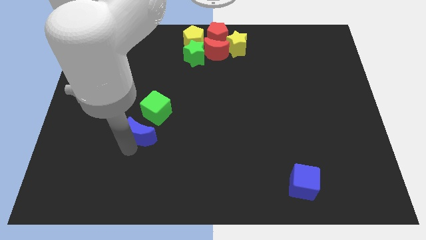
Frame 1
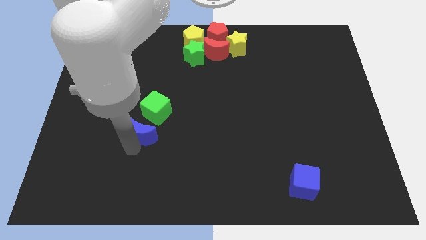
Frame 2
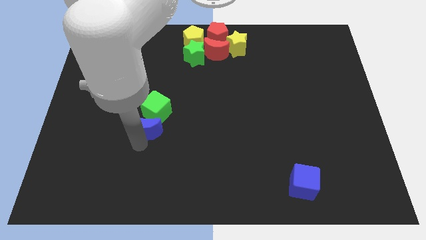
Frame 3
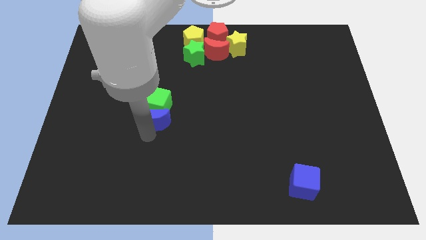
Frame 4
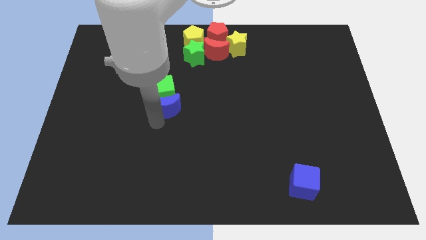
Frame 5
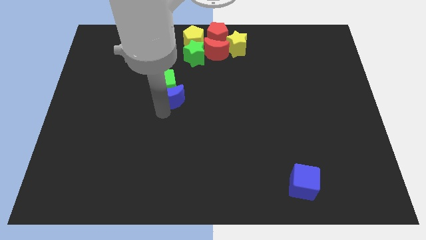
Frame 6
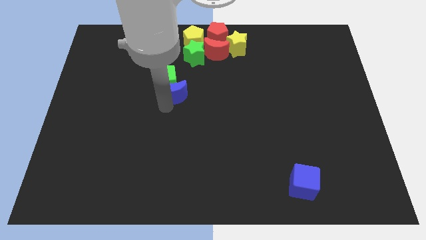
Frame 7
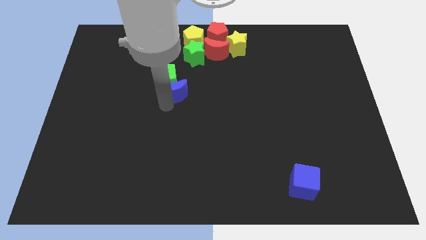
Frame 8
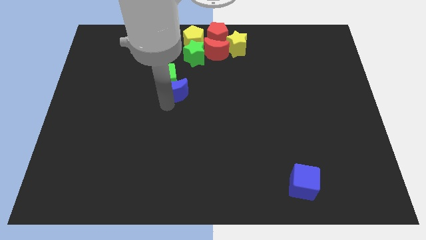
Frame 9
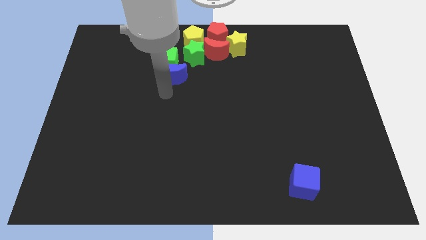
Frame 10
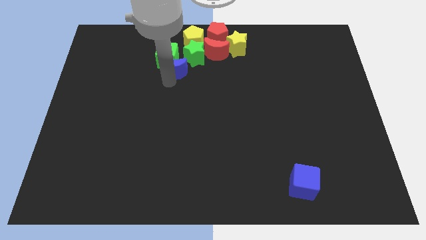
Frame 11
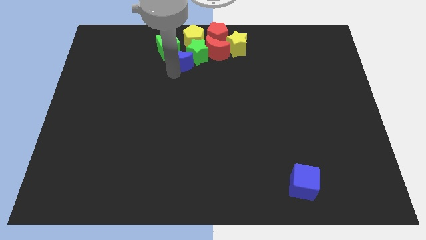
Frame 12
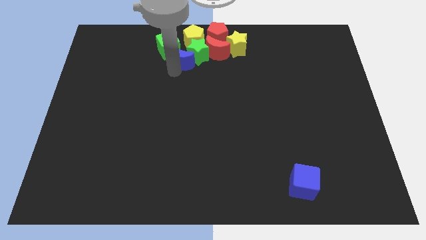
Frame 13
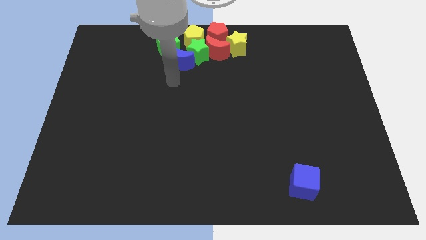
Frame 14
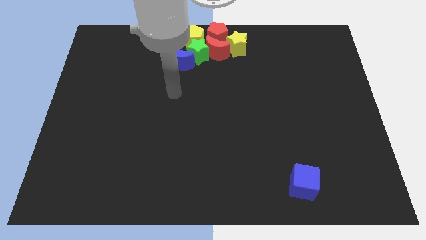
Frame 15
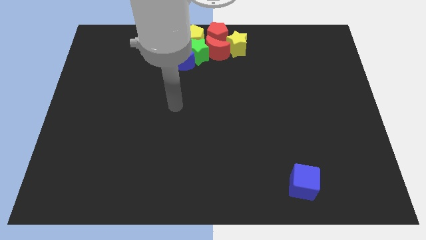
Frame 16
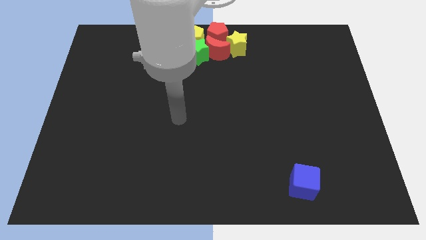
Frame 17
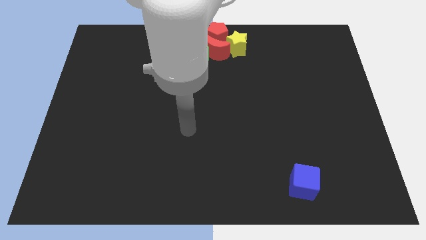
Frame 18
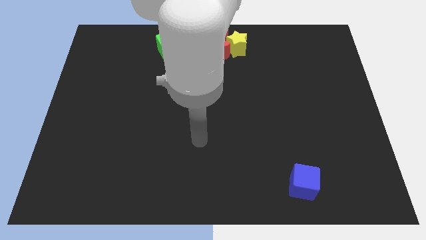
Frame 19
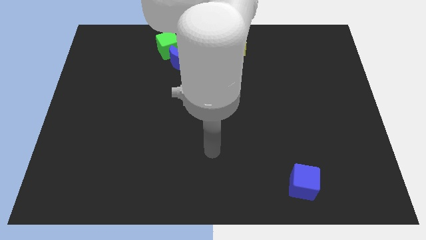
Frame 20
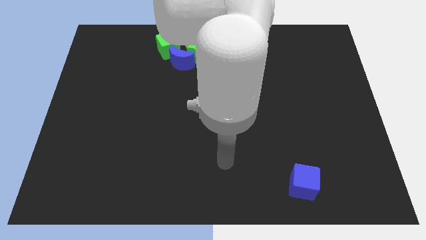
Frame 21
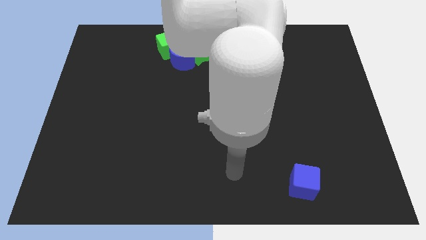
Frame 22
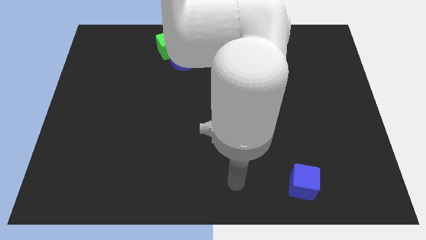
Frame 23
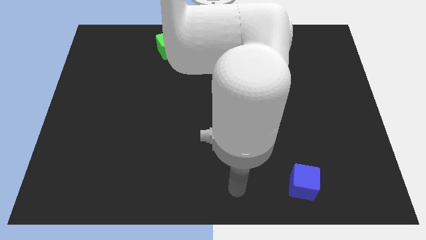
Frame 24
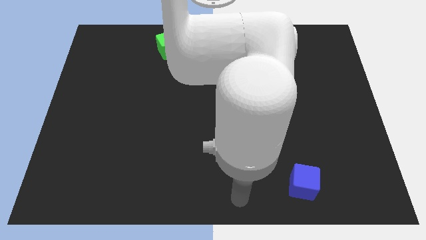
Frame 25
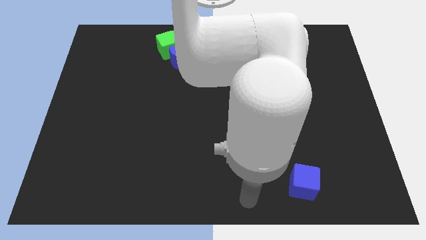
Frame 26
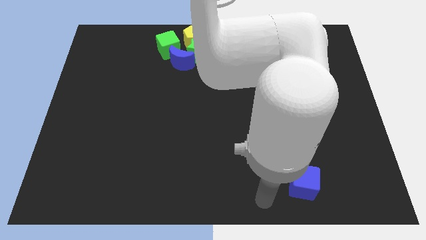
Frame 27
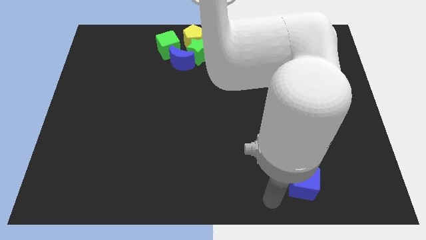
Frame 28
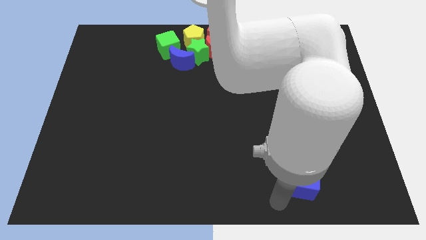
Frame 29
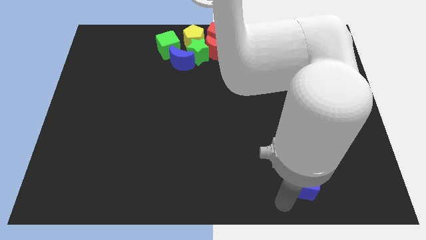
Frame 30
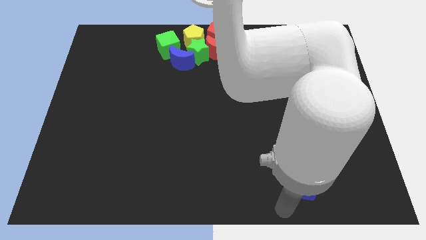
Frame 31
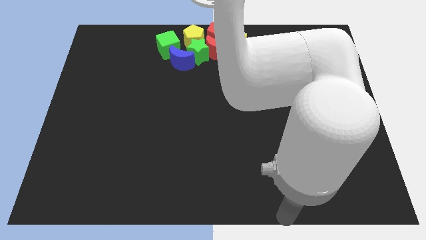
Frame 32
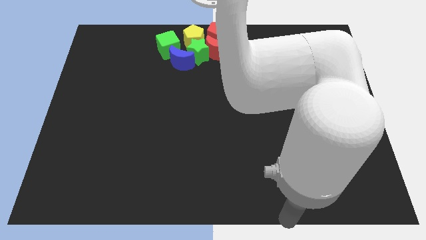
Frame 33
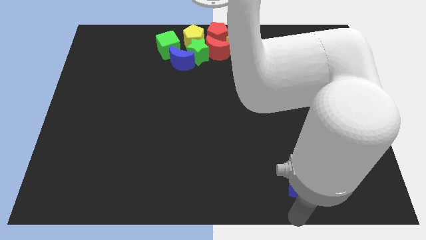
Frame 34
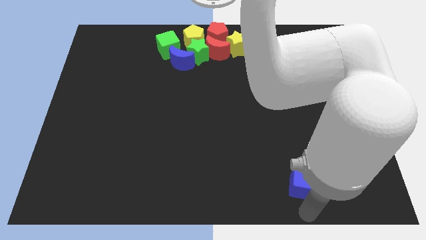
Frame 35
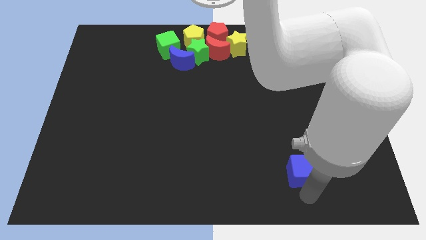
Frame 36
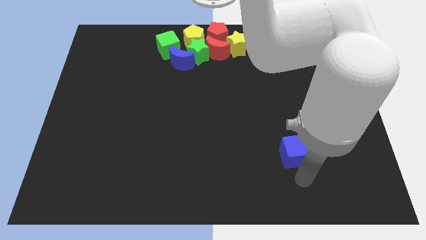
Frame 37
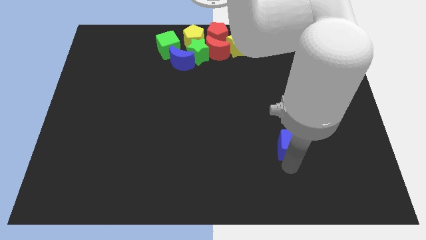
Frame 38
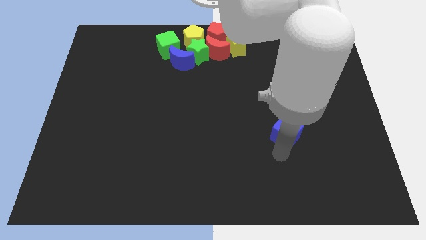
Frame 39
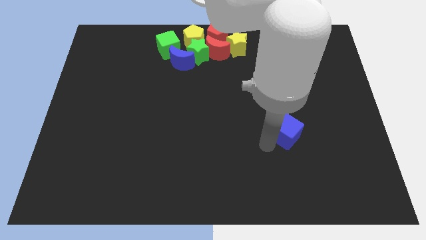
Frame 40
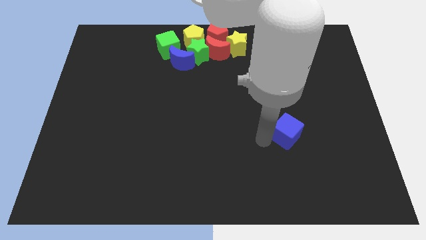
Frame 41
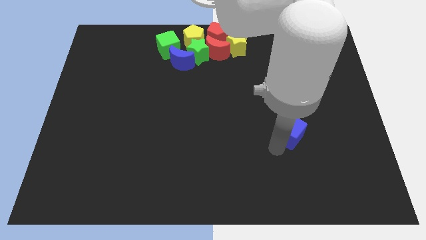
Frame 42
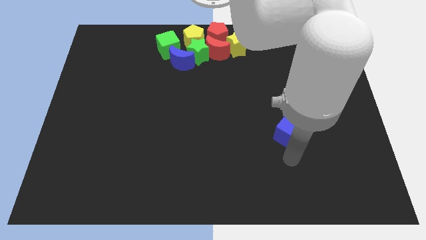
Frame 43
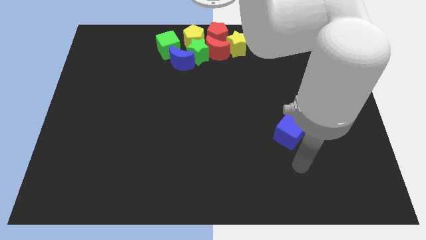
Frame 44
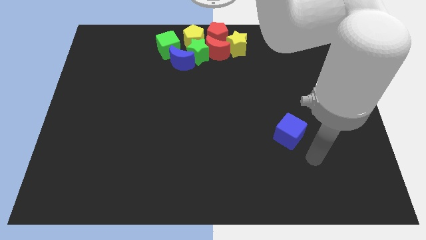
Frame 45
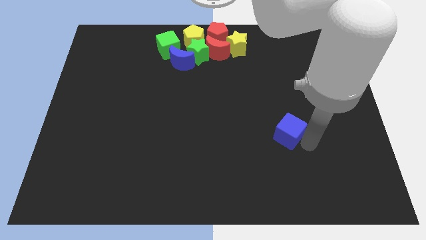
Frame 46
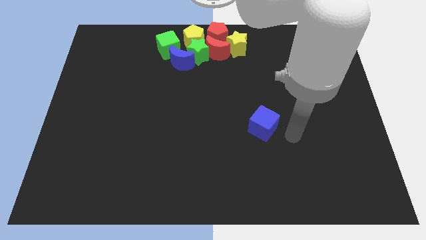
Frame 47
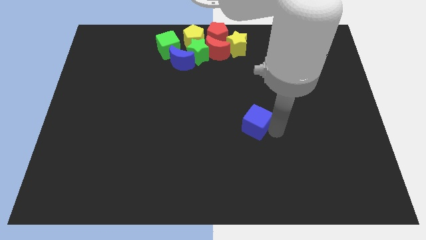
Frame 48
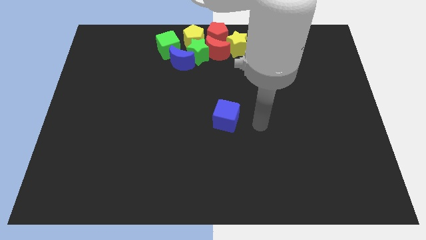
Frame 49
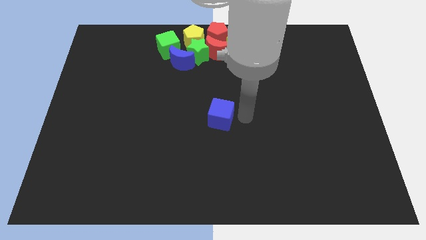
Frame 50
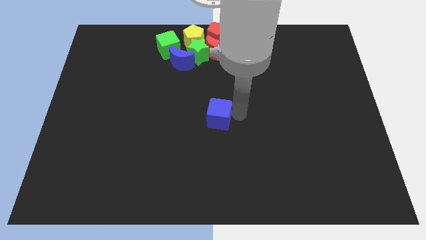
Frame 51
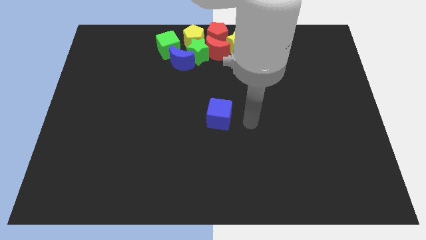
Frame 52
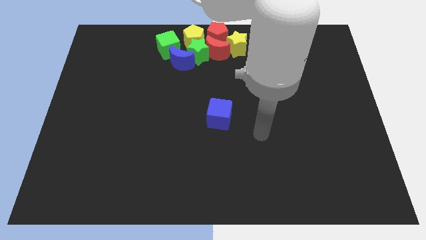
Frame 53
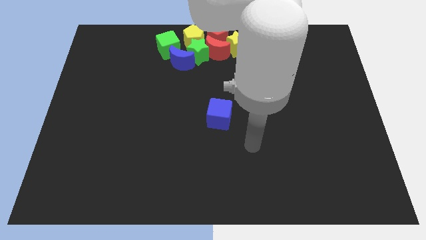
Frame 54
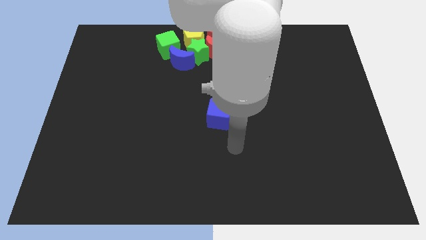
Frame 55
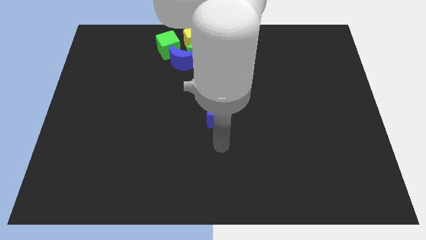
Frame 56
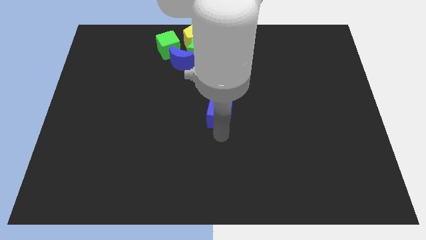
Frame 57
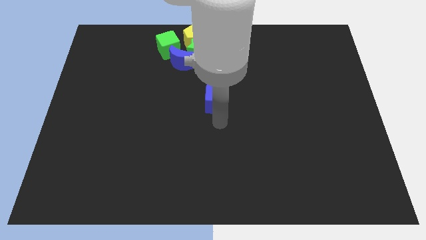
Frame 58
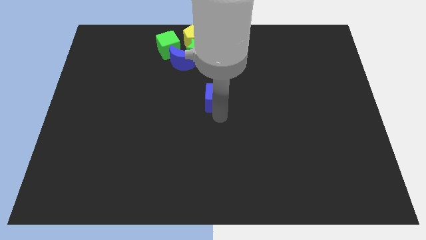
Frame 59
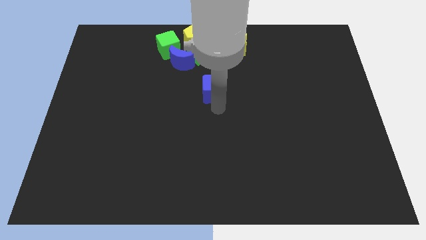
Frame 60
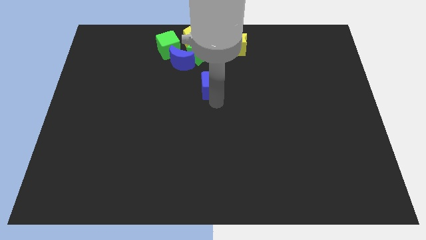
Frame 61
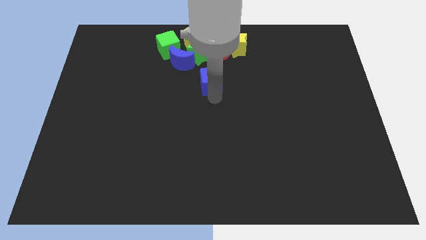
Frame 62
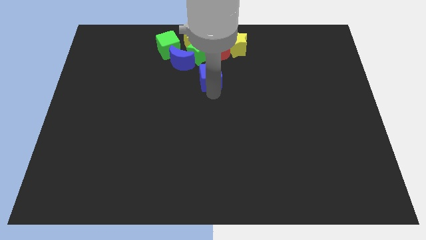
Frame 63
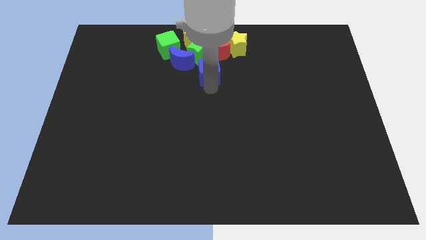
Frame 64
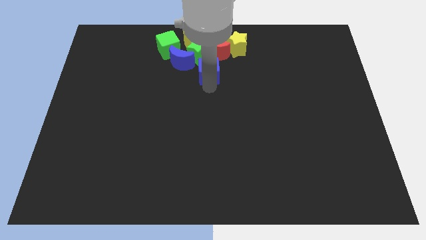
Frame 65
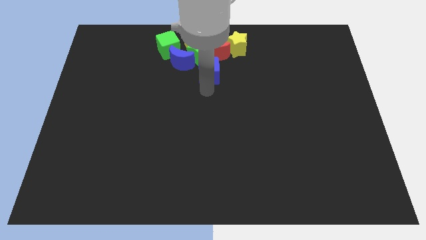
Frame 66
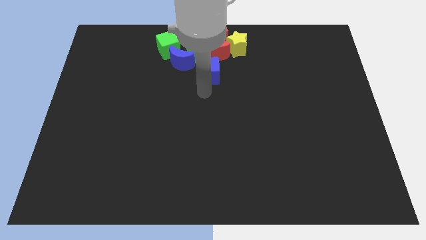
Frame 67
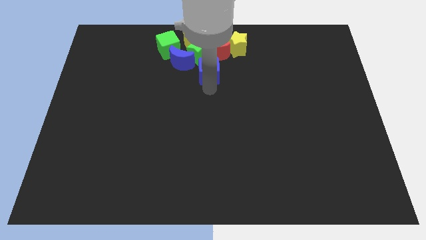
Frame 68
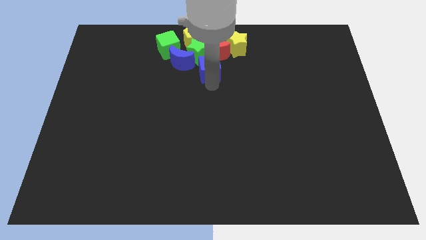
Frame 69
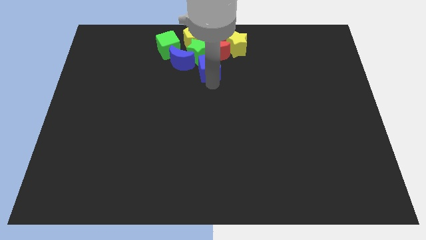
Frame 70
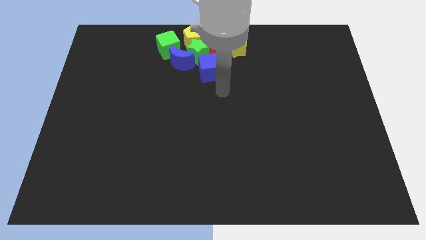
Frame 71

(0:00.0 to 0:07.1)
move blue blocks and green cube to group of blocks

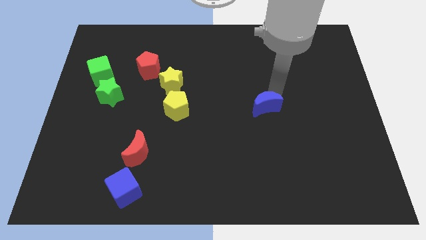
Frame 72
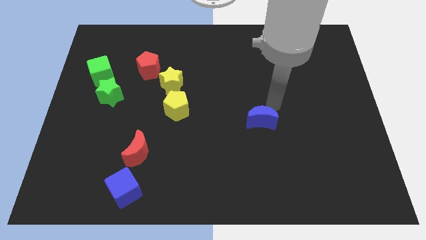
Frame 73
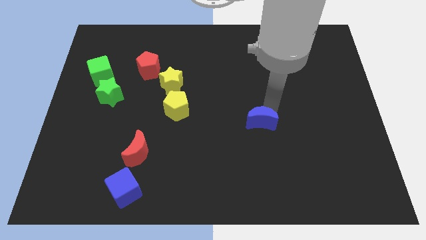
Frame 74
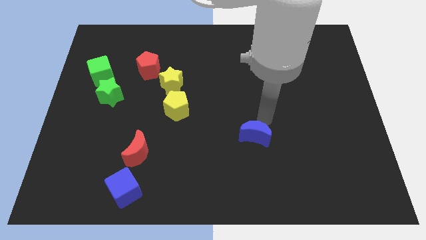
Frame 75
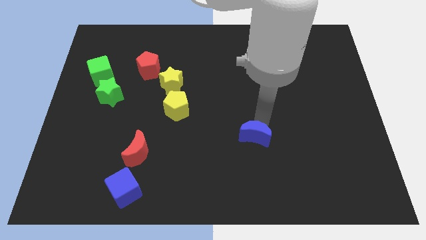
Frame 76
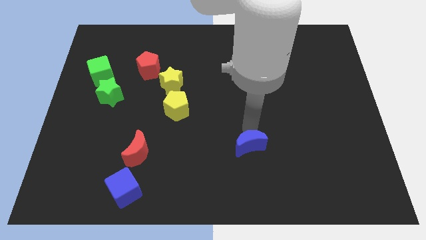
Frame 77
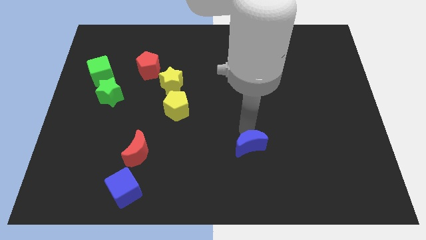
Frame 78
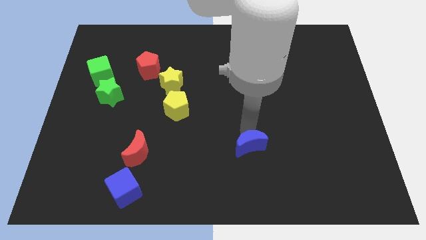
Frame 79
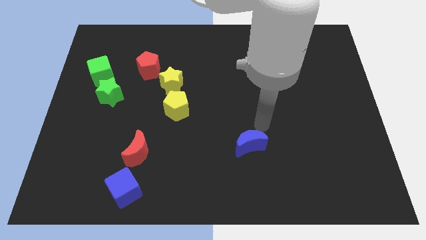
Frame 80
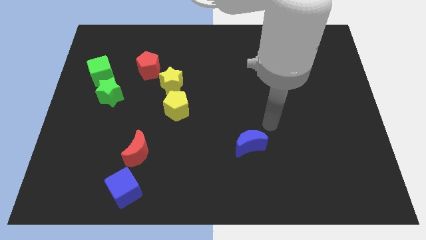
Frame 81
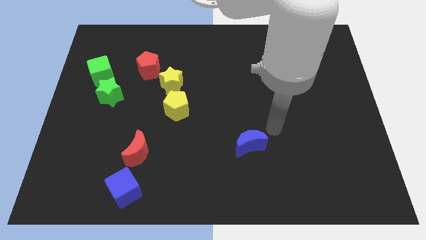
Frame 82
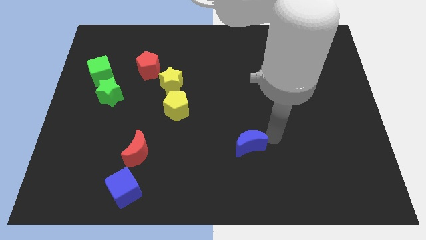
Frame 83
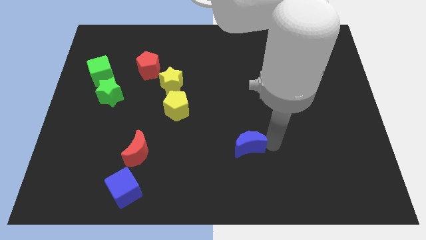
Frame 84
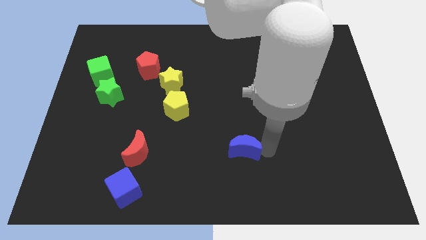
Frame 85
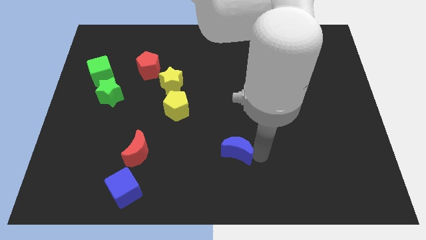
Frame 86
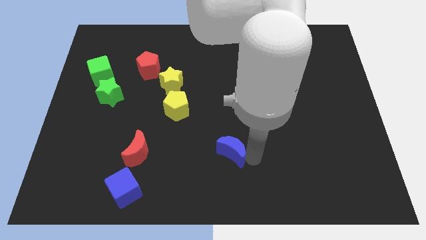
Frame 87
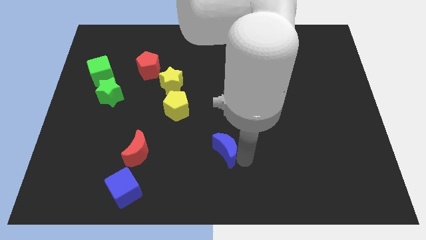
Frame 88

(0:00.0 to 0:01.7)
move the blue moon towards the bottom center of the board
